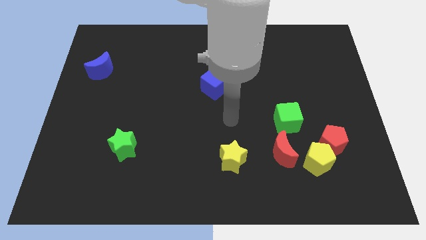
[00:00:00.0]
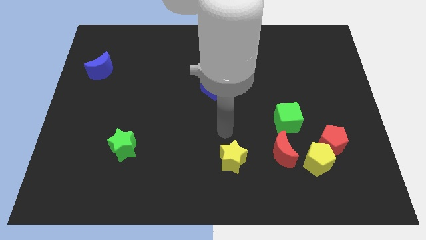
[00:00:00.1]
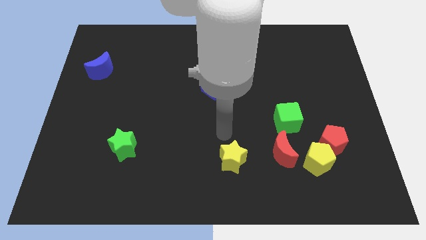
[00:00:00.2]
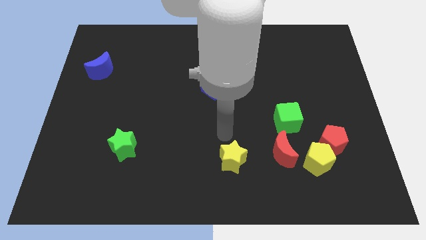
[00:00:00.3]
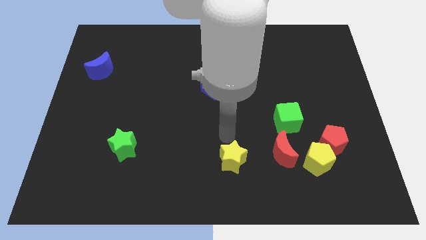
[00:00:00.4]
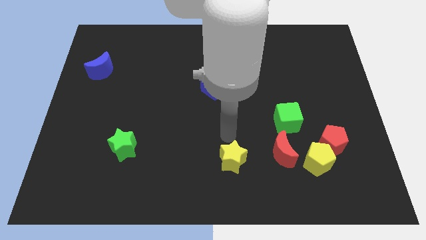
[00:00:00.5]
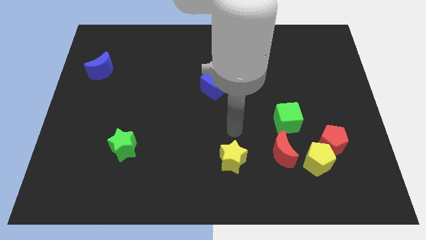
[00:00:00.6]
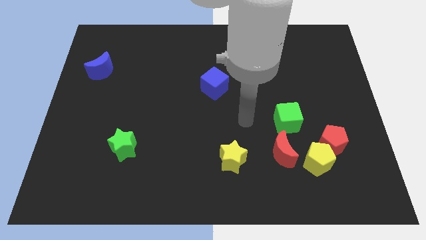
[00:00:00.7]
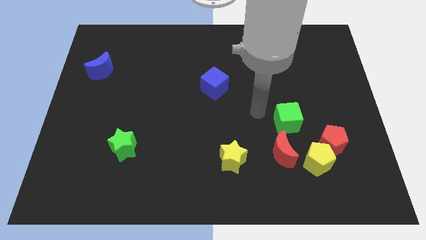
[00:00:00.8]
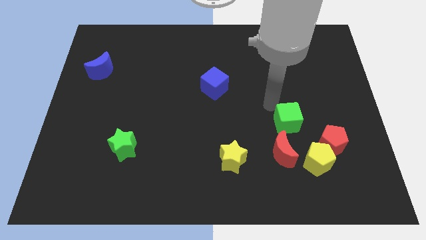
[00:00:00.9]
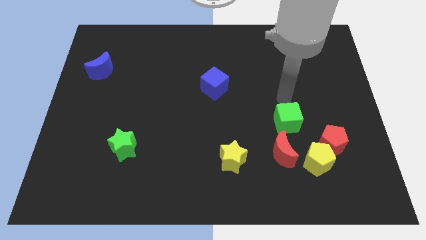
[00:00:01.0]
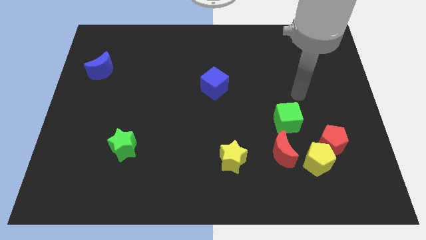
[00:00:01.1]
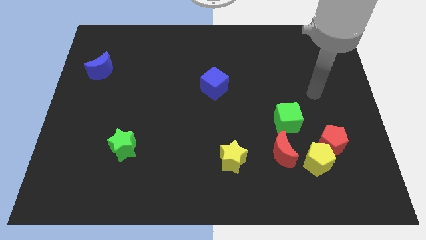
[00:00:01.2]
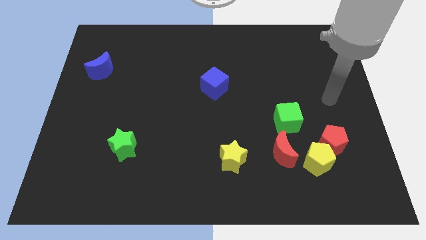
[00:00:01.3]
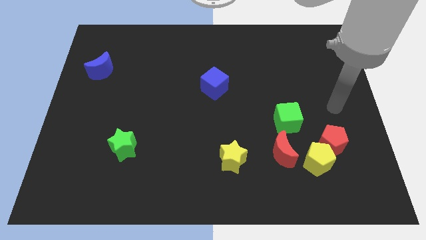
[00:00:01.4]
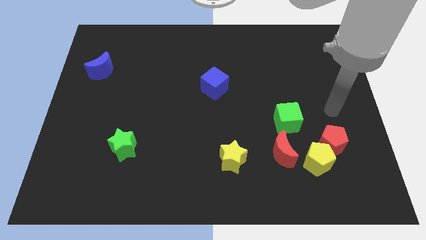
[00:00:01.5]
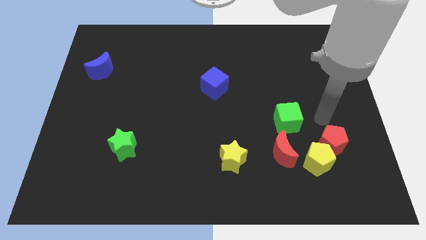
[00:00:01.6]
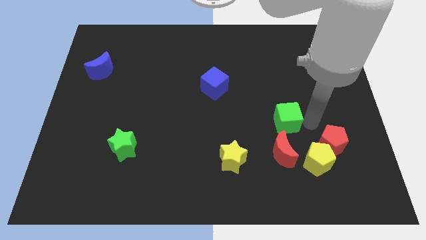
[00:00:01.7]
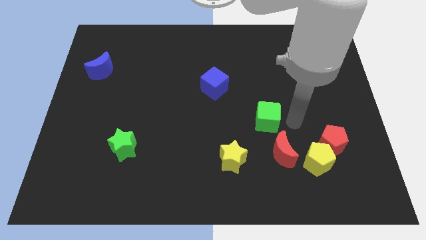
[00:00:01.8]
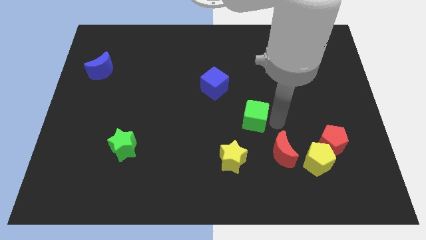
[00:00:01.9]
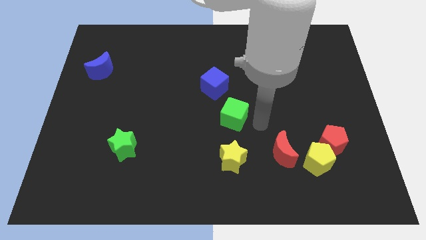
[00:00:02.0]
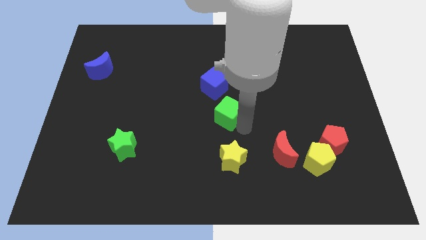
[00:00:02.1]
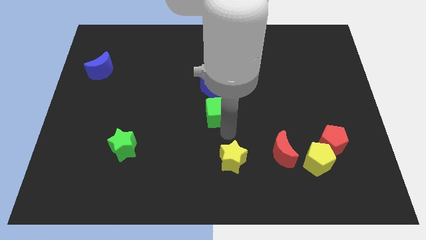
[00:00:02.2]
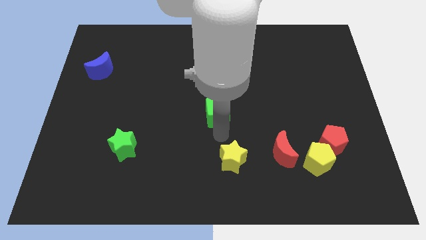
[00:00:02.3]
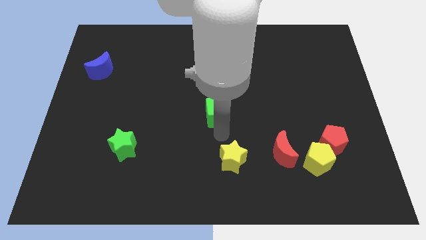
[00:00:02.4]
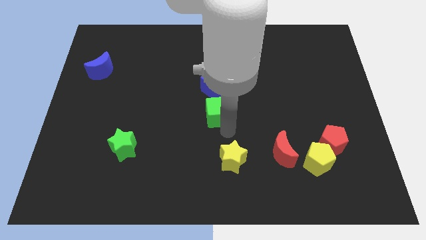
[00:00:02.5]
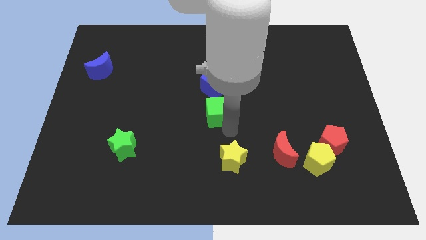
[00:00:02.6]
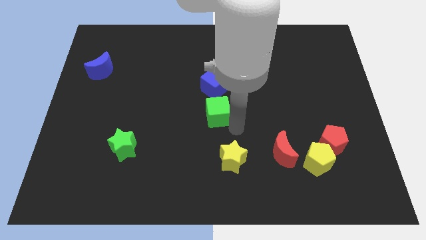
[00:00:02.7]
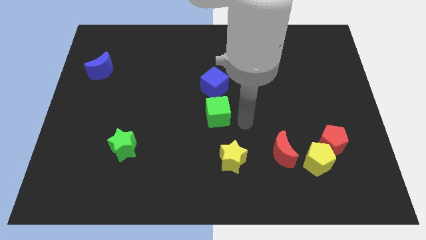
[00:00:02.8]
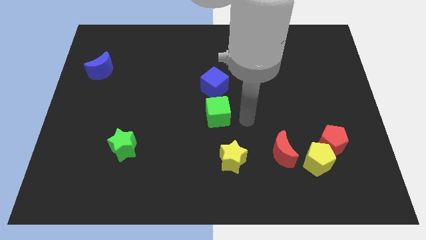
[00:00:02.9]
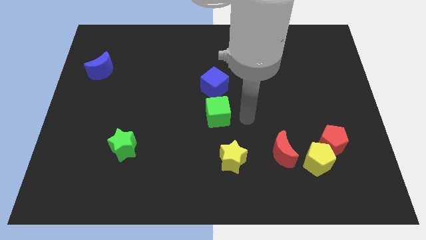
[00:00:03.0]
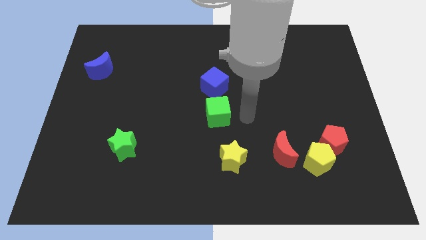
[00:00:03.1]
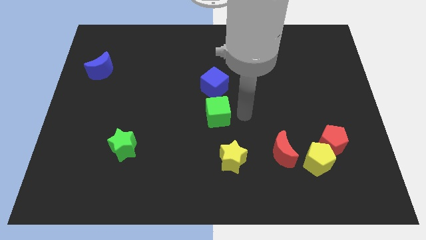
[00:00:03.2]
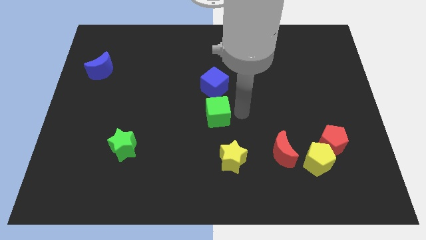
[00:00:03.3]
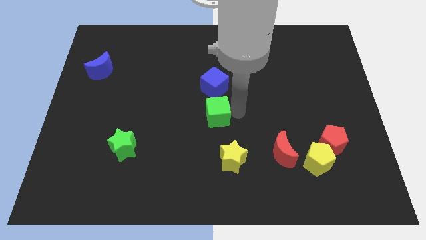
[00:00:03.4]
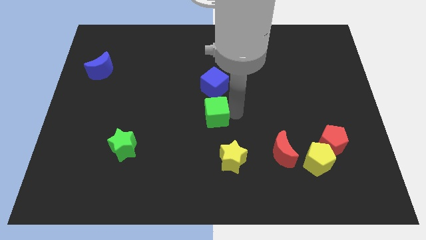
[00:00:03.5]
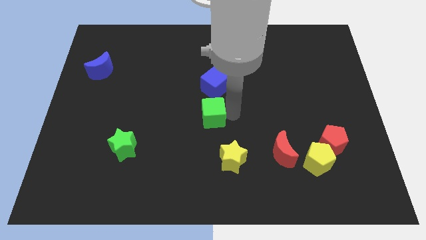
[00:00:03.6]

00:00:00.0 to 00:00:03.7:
move the green cube below the blue cube

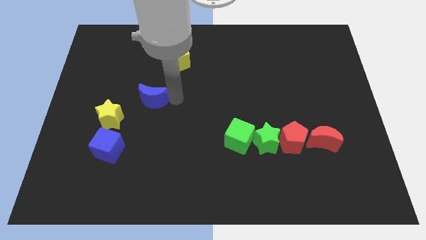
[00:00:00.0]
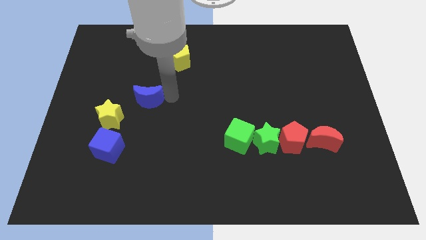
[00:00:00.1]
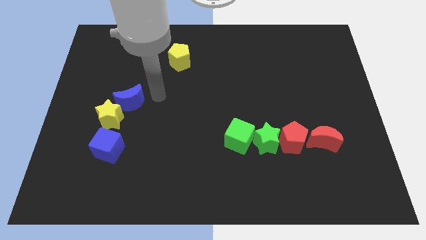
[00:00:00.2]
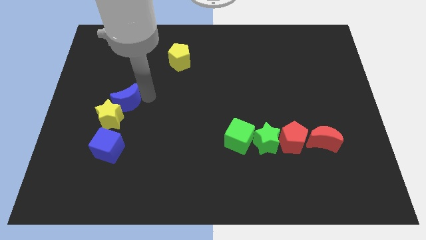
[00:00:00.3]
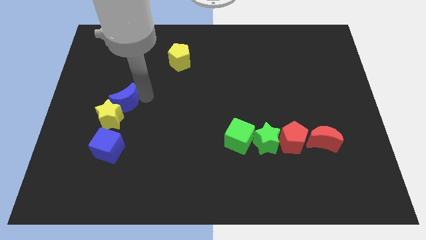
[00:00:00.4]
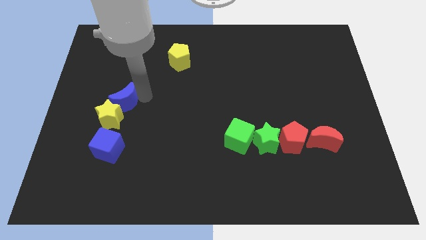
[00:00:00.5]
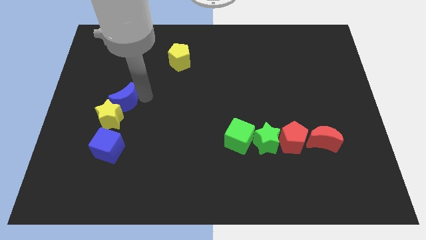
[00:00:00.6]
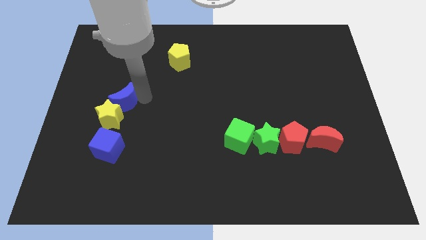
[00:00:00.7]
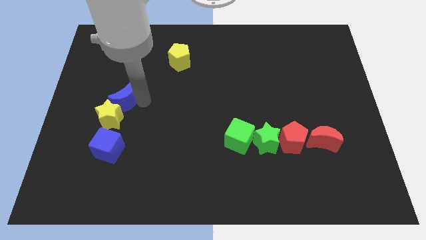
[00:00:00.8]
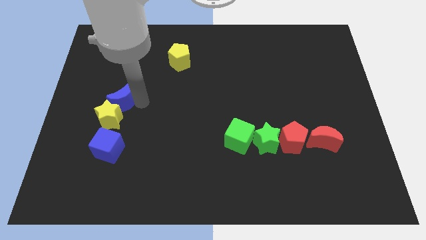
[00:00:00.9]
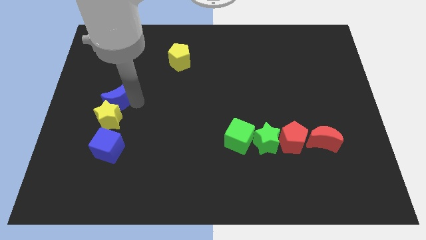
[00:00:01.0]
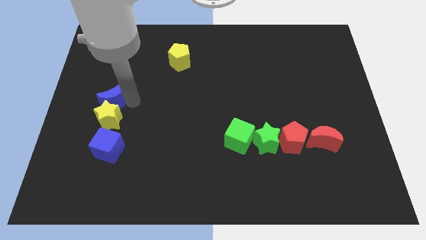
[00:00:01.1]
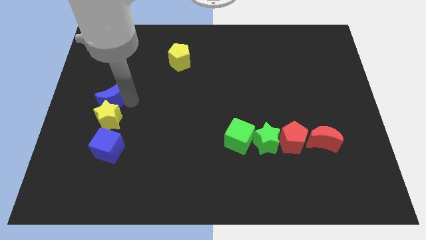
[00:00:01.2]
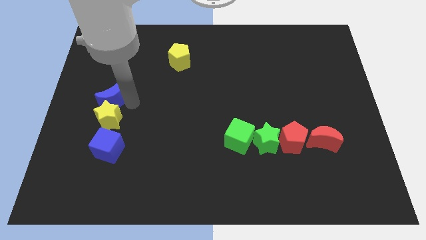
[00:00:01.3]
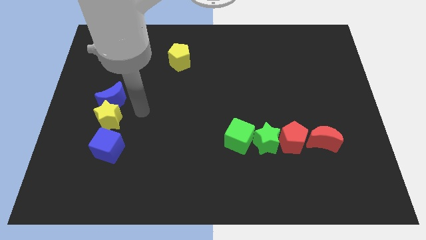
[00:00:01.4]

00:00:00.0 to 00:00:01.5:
push the blue crescent to the top of the yellow star

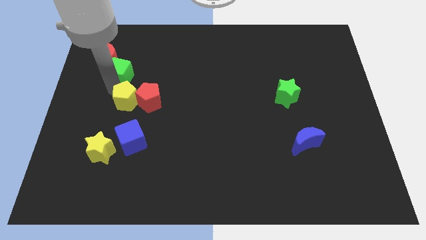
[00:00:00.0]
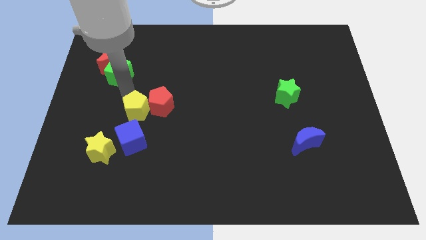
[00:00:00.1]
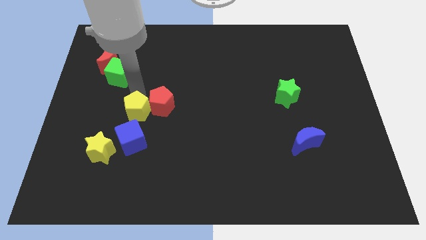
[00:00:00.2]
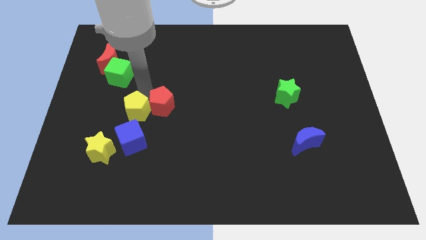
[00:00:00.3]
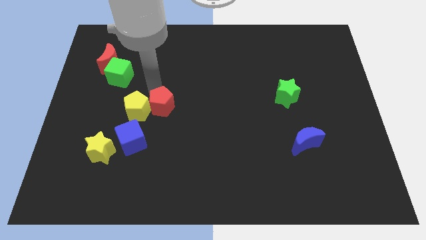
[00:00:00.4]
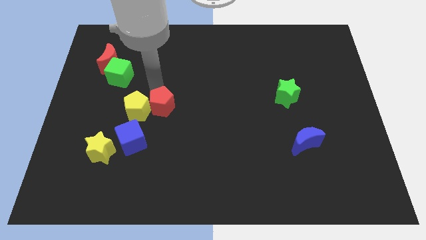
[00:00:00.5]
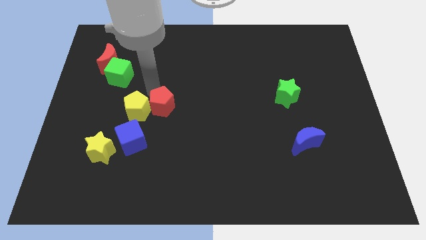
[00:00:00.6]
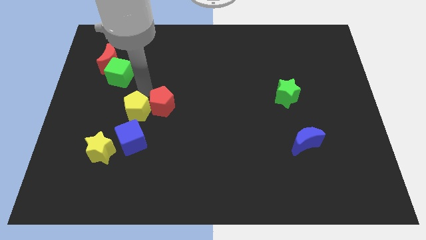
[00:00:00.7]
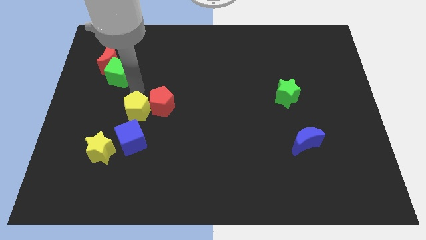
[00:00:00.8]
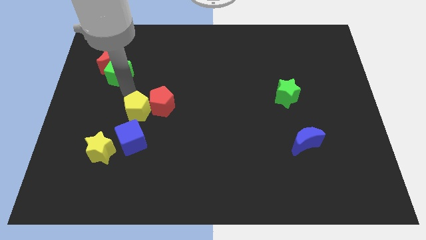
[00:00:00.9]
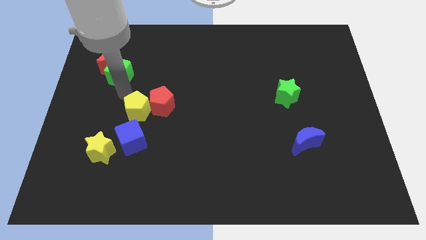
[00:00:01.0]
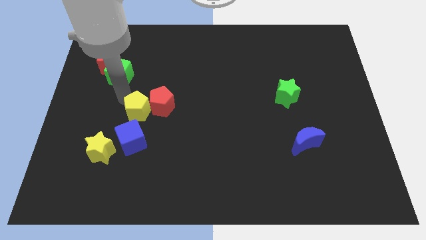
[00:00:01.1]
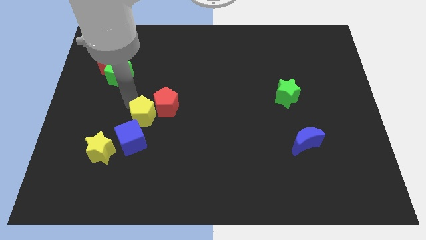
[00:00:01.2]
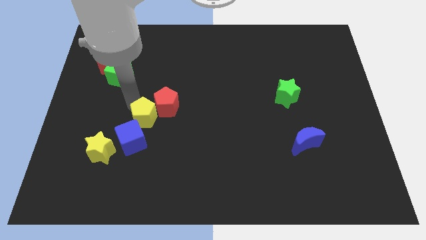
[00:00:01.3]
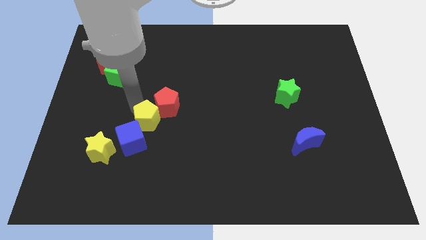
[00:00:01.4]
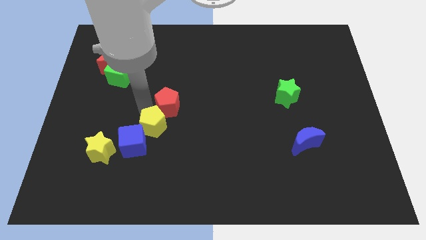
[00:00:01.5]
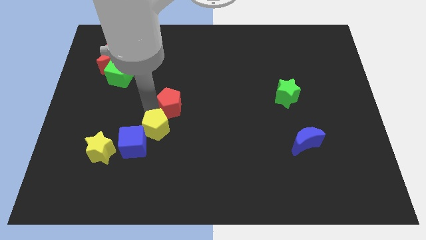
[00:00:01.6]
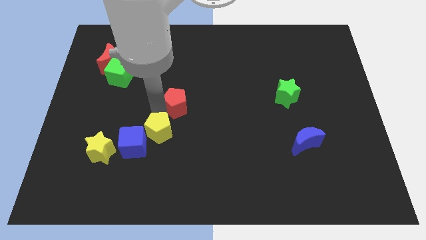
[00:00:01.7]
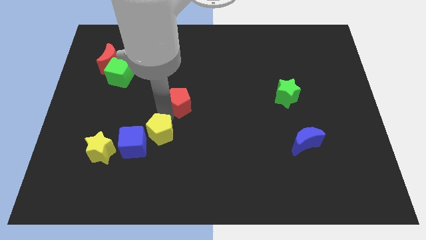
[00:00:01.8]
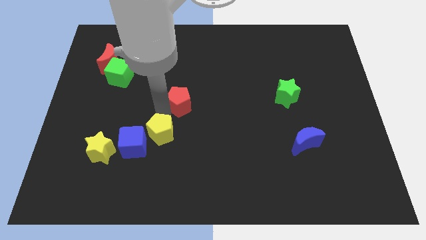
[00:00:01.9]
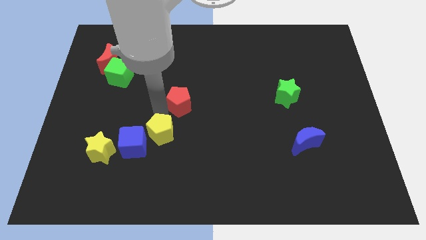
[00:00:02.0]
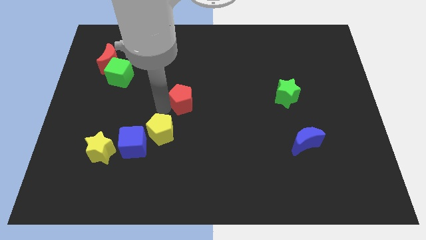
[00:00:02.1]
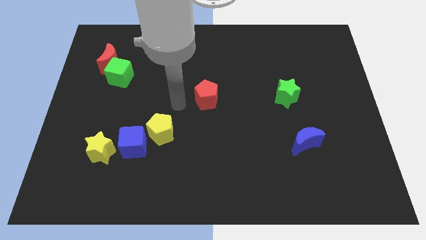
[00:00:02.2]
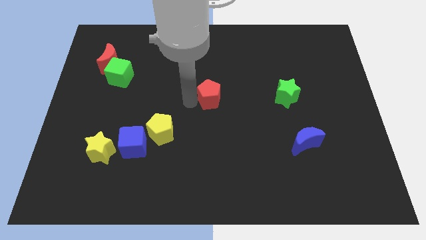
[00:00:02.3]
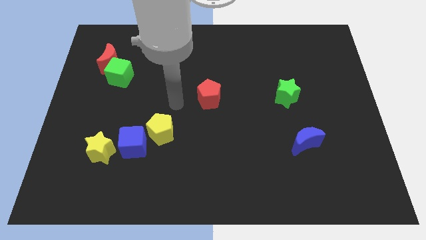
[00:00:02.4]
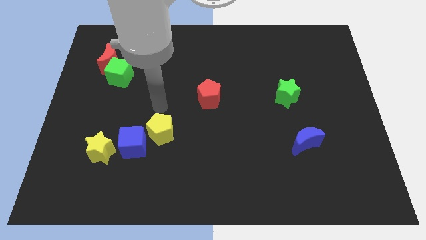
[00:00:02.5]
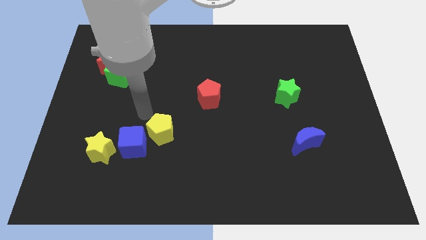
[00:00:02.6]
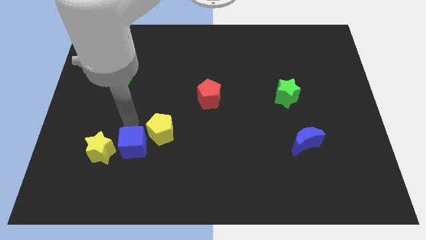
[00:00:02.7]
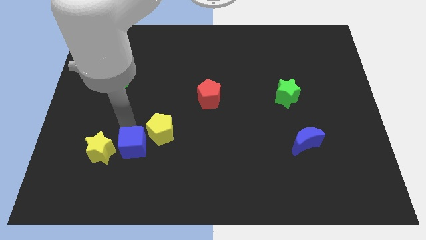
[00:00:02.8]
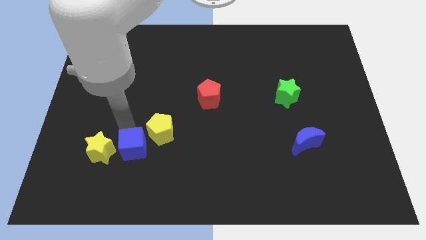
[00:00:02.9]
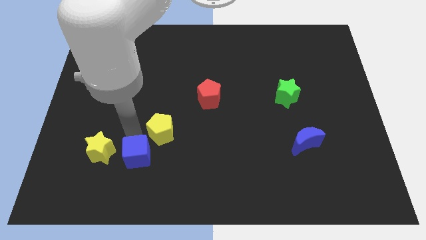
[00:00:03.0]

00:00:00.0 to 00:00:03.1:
separate red and the yellow pentagon

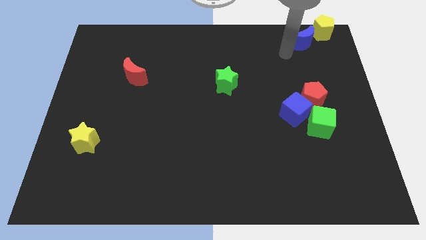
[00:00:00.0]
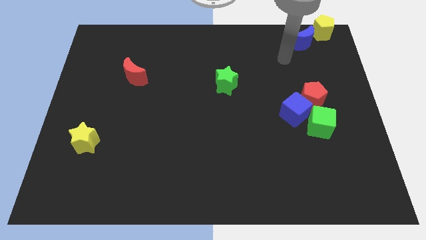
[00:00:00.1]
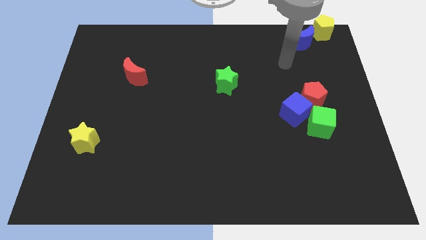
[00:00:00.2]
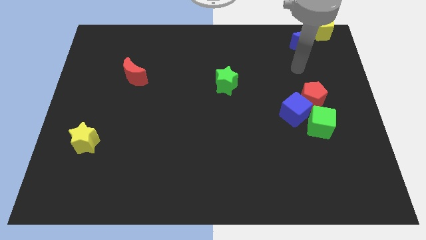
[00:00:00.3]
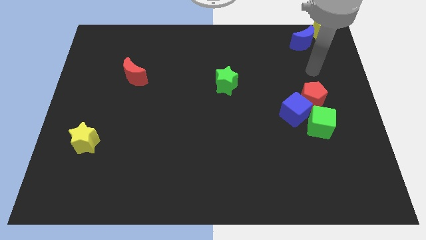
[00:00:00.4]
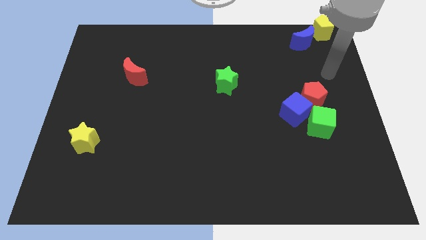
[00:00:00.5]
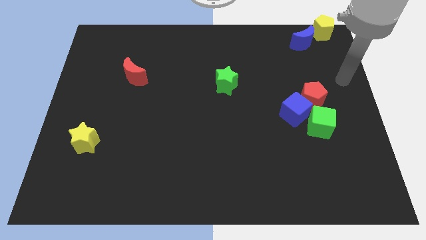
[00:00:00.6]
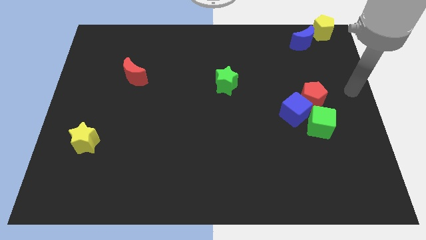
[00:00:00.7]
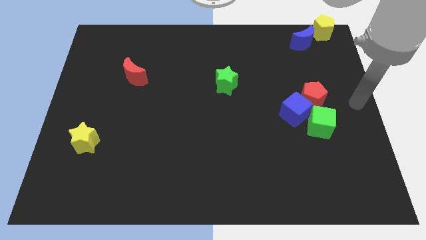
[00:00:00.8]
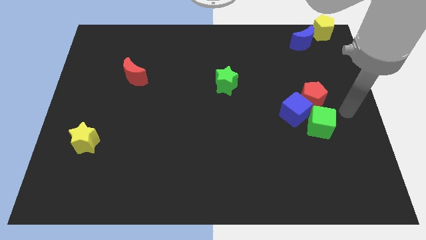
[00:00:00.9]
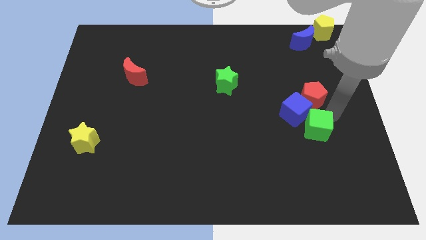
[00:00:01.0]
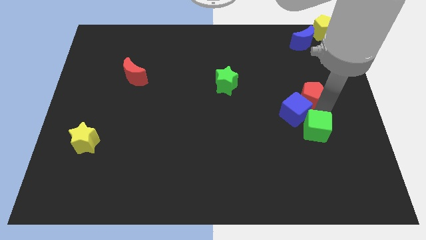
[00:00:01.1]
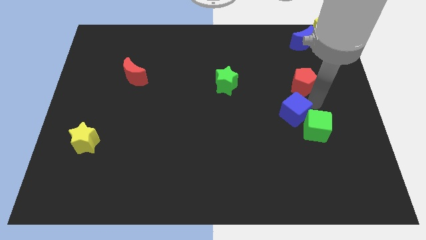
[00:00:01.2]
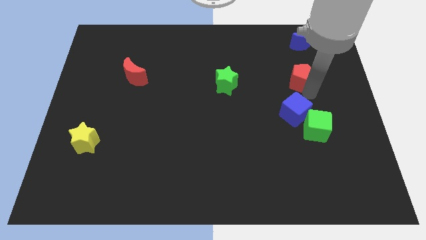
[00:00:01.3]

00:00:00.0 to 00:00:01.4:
separate red pentagon and green cube